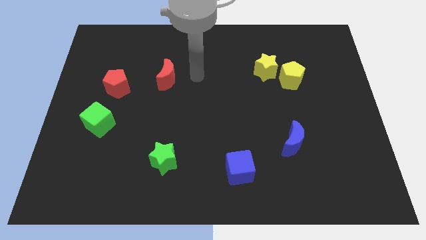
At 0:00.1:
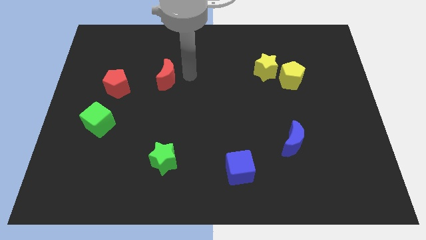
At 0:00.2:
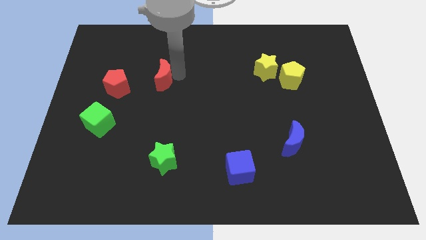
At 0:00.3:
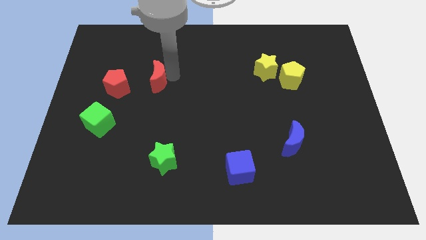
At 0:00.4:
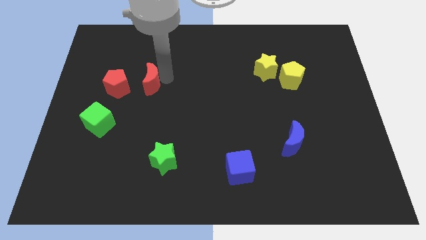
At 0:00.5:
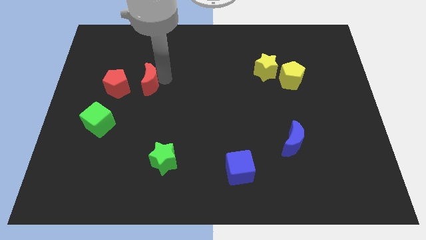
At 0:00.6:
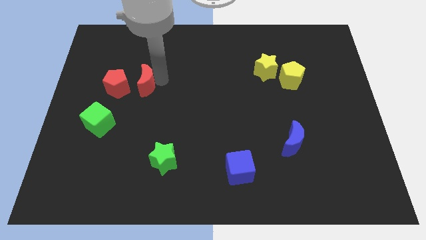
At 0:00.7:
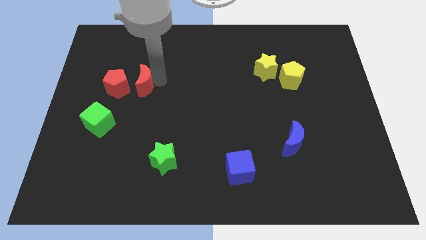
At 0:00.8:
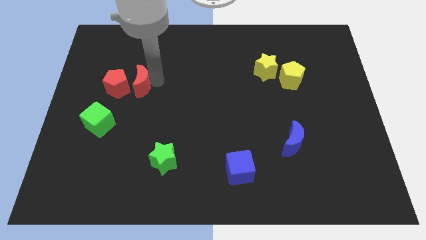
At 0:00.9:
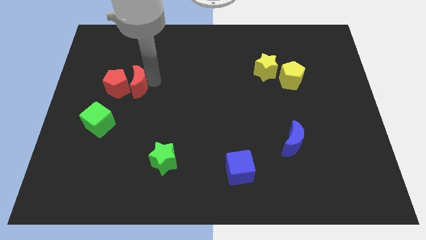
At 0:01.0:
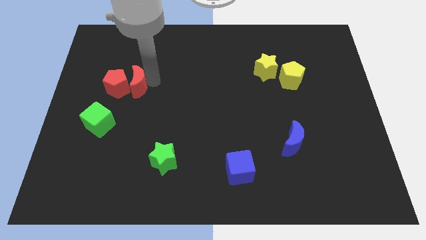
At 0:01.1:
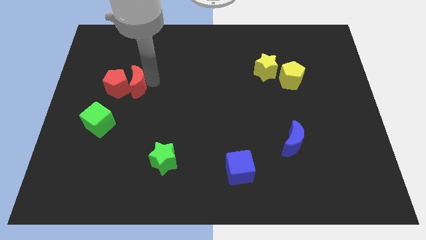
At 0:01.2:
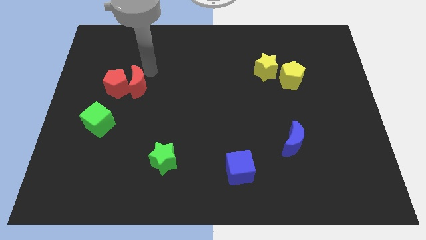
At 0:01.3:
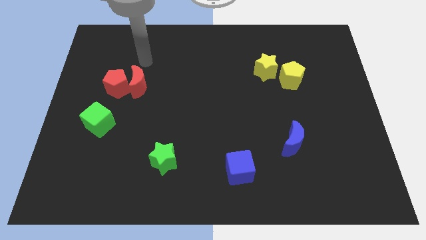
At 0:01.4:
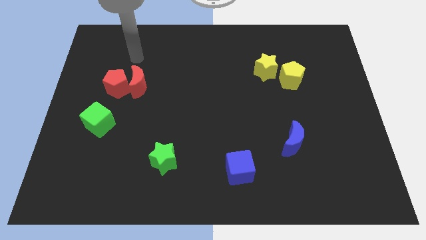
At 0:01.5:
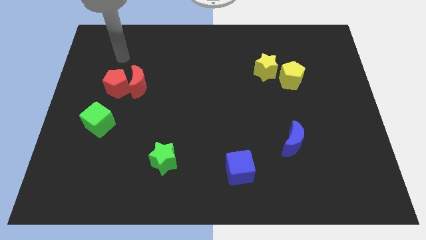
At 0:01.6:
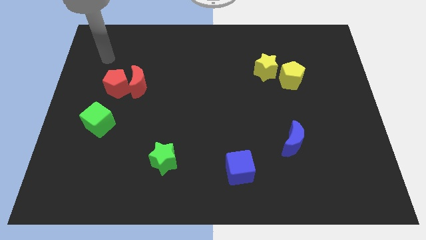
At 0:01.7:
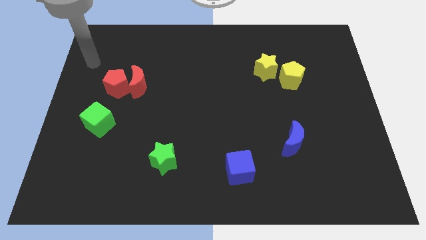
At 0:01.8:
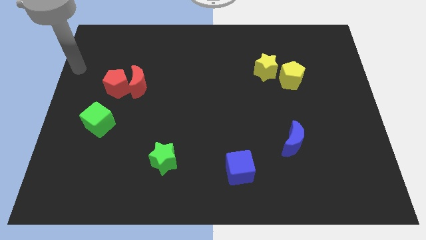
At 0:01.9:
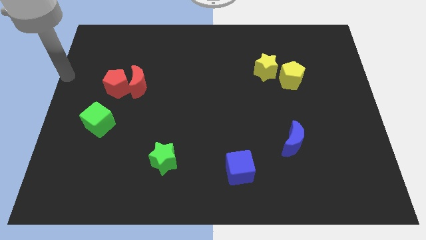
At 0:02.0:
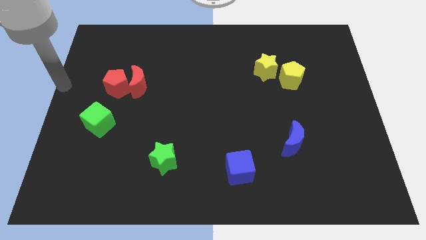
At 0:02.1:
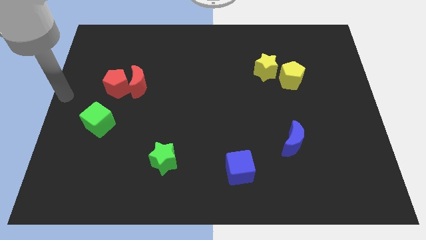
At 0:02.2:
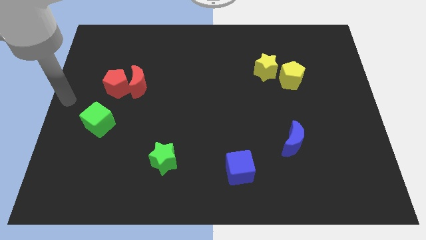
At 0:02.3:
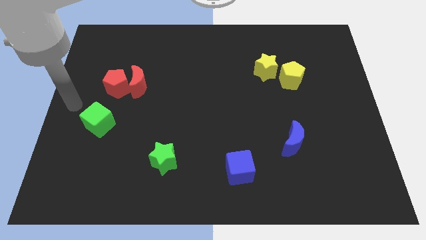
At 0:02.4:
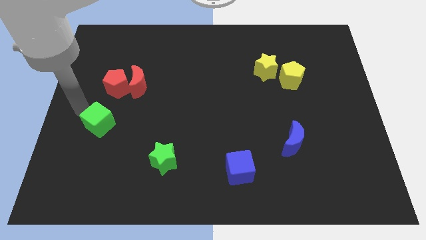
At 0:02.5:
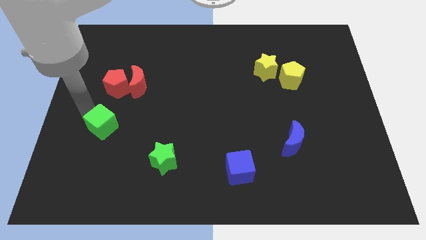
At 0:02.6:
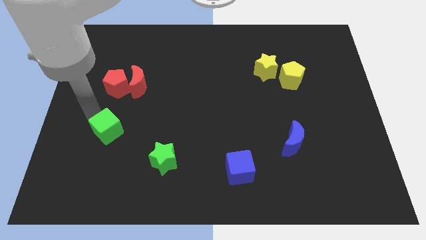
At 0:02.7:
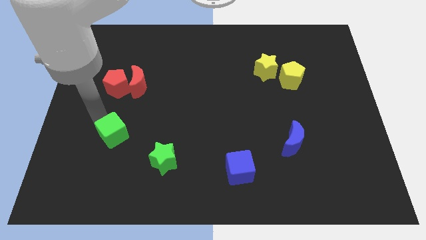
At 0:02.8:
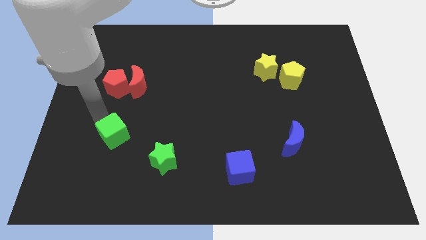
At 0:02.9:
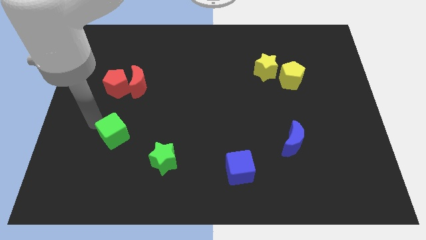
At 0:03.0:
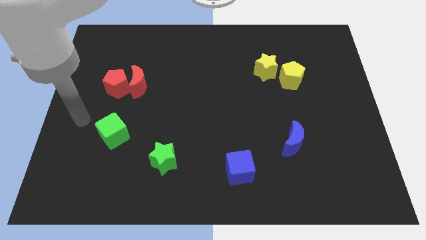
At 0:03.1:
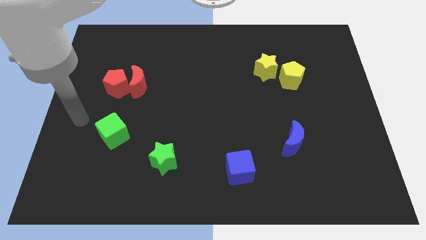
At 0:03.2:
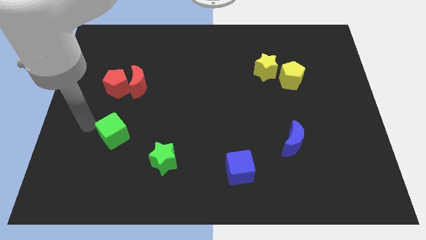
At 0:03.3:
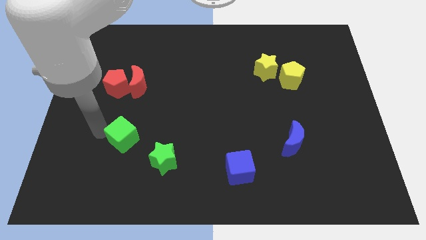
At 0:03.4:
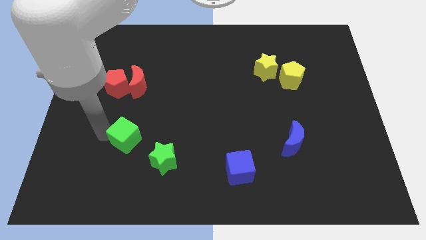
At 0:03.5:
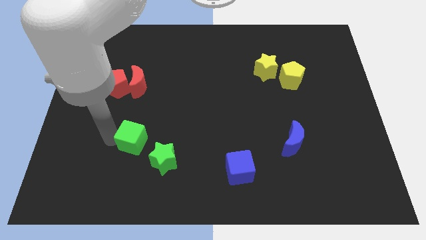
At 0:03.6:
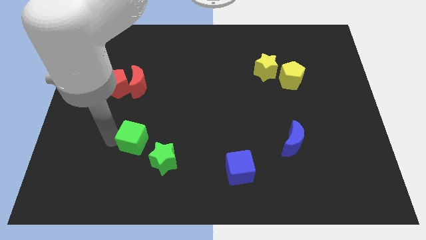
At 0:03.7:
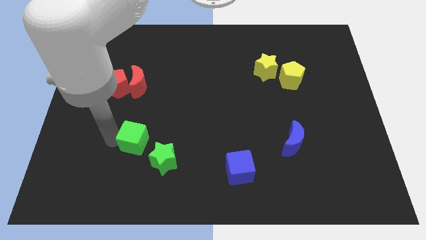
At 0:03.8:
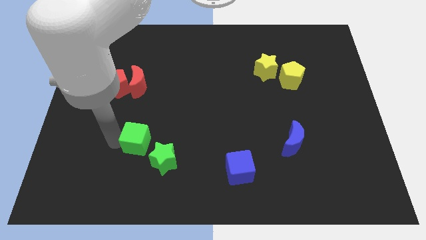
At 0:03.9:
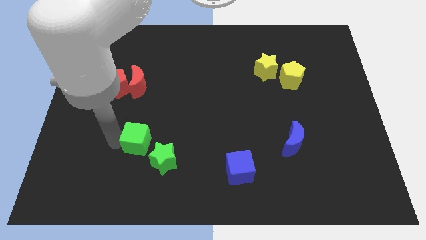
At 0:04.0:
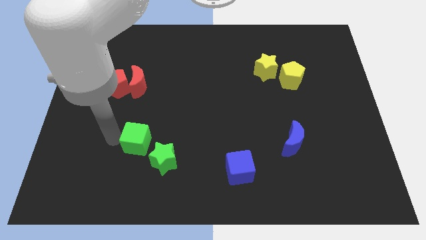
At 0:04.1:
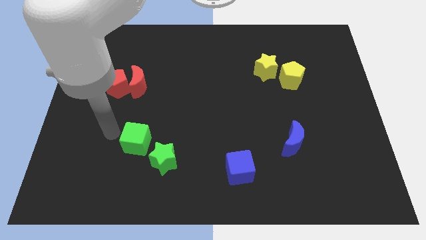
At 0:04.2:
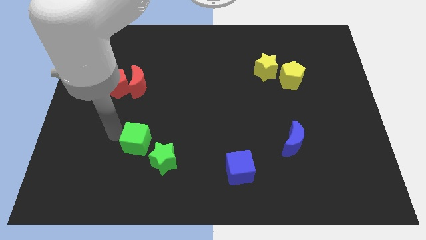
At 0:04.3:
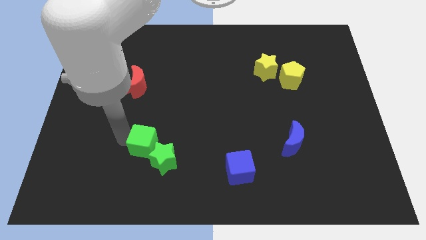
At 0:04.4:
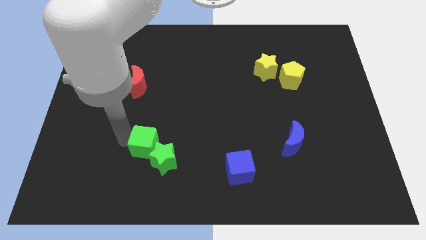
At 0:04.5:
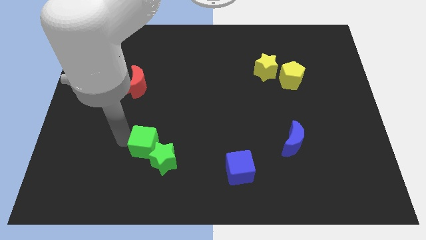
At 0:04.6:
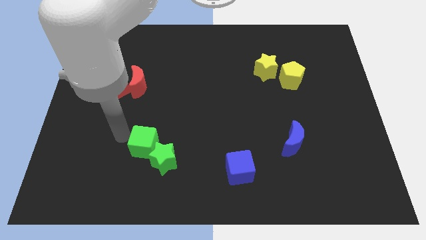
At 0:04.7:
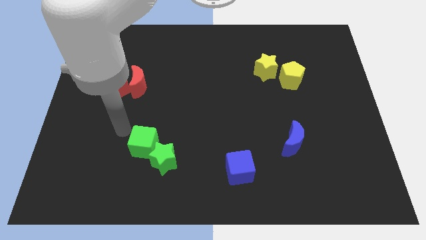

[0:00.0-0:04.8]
group up the red blocks and green blocks separately at the left side of the board

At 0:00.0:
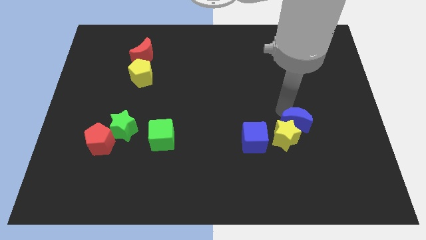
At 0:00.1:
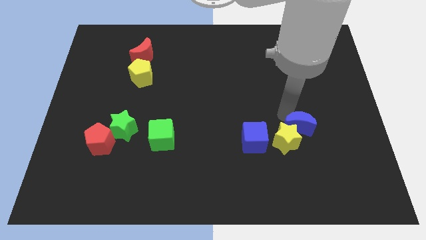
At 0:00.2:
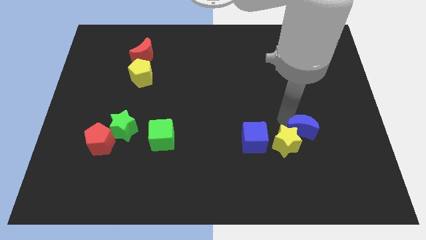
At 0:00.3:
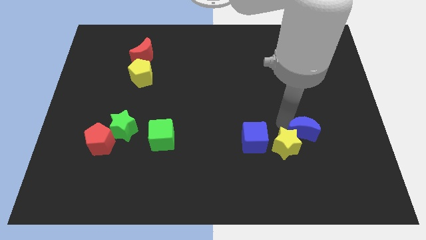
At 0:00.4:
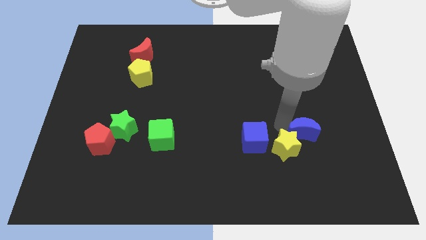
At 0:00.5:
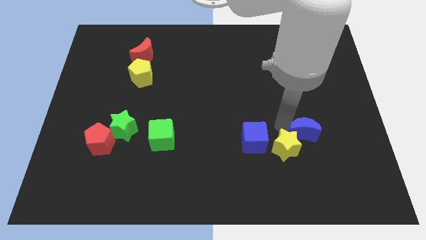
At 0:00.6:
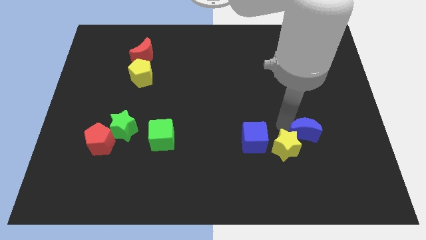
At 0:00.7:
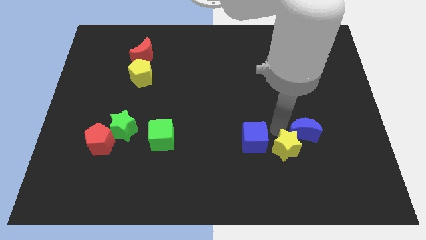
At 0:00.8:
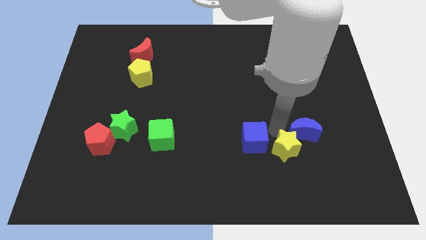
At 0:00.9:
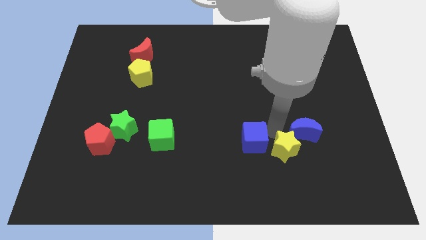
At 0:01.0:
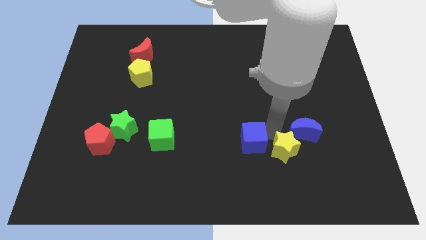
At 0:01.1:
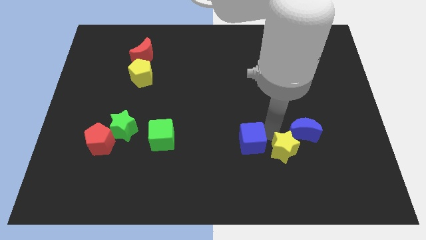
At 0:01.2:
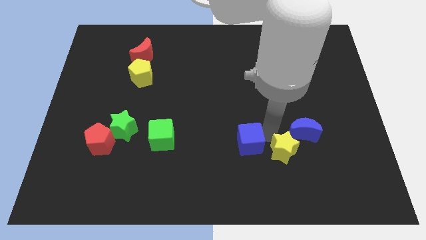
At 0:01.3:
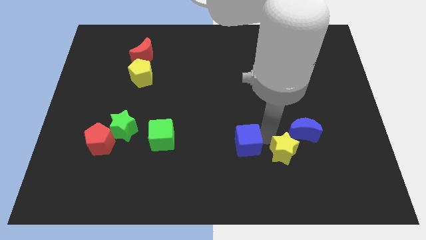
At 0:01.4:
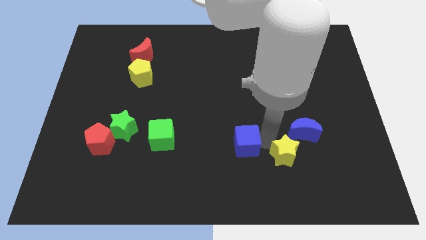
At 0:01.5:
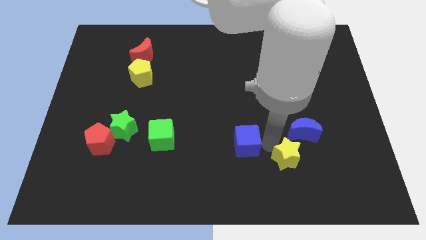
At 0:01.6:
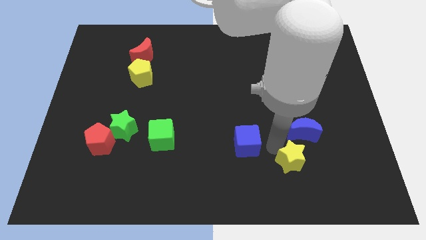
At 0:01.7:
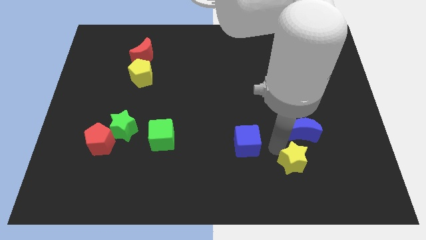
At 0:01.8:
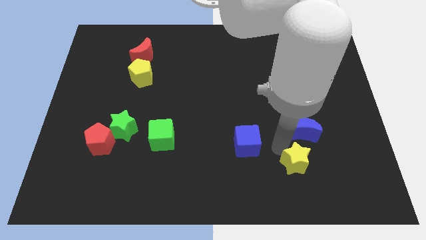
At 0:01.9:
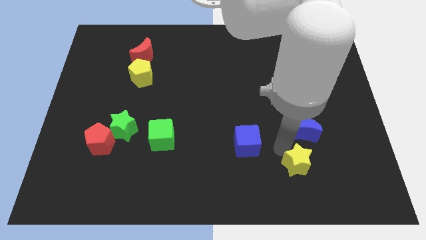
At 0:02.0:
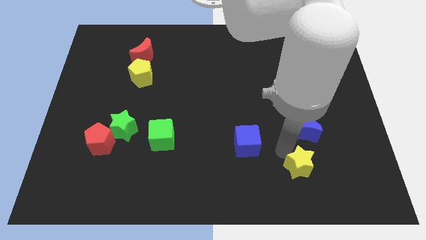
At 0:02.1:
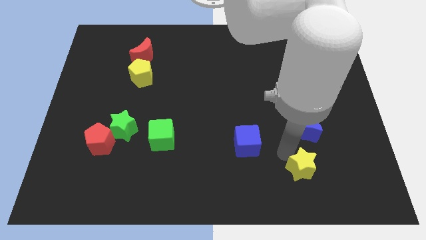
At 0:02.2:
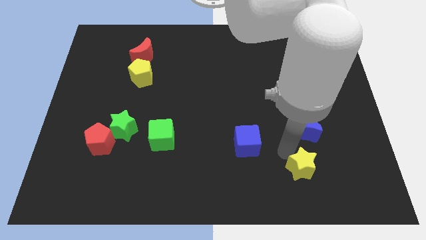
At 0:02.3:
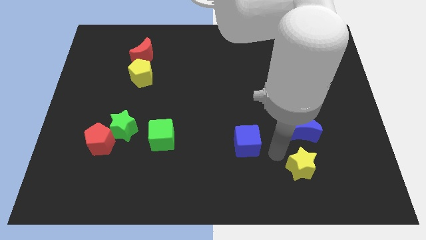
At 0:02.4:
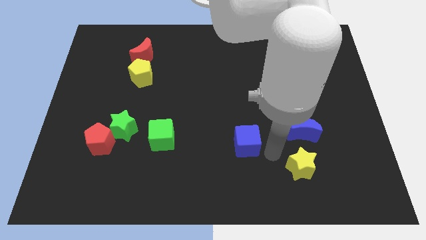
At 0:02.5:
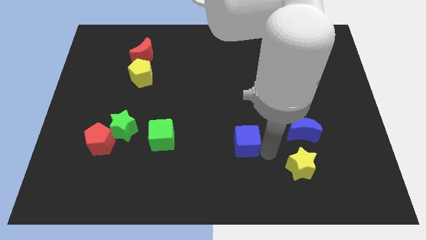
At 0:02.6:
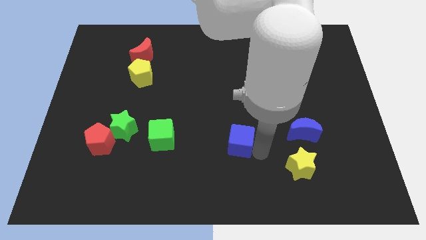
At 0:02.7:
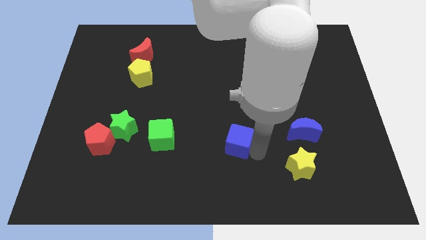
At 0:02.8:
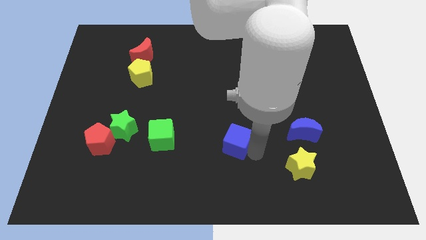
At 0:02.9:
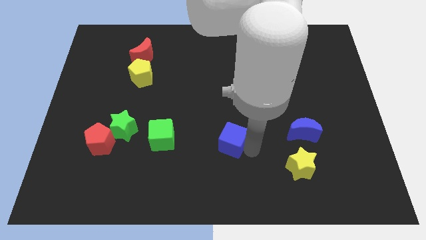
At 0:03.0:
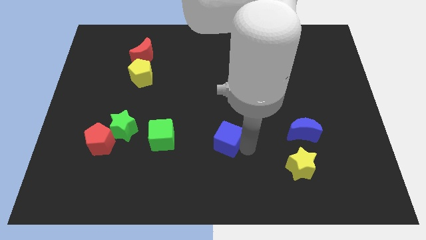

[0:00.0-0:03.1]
separate blue blocks and yellow star together

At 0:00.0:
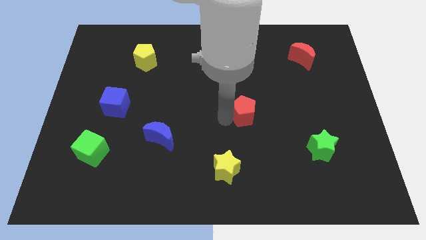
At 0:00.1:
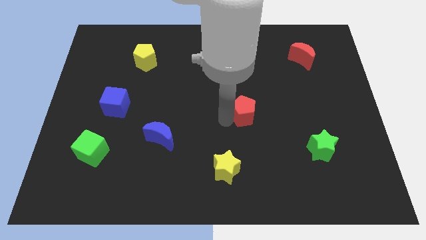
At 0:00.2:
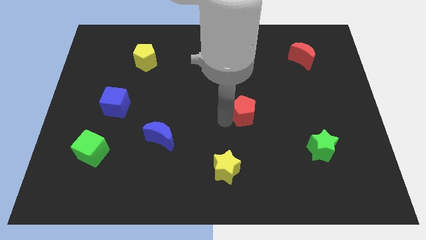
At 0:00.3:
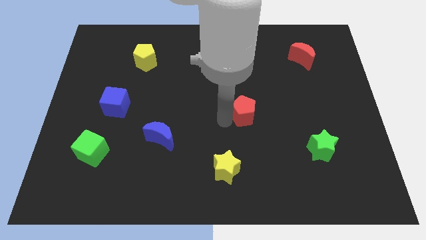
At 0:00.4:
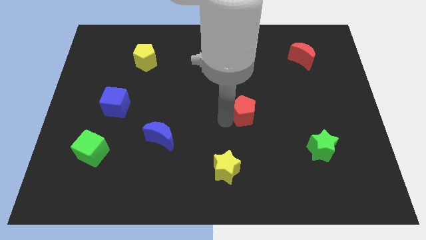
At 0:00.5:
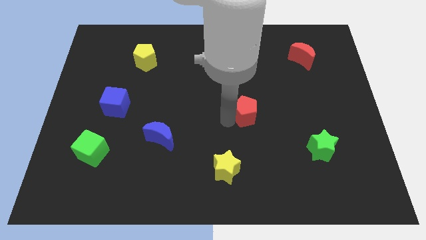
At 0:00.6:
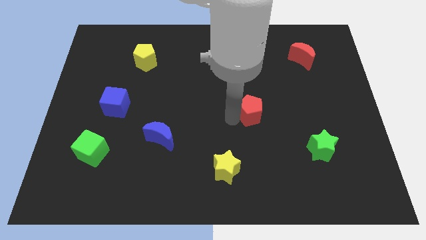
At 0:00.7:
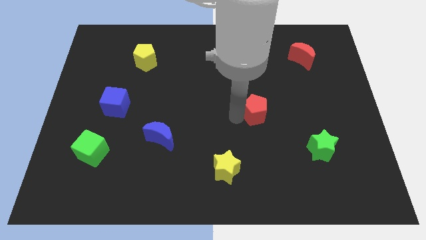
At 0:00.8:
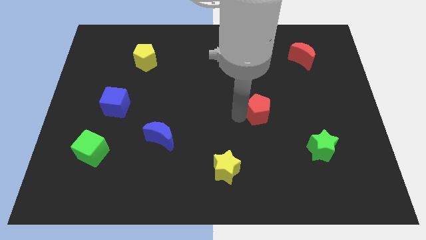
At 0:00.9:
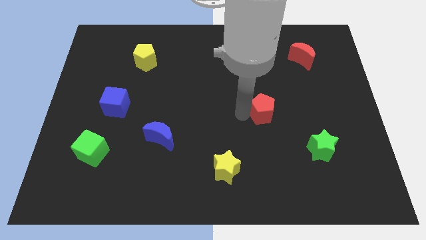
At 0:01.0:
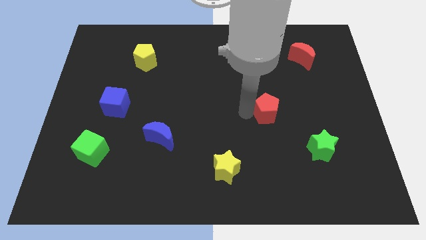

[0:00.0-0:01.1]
place red pentagon diagonally right to yellow star
